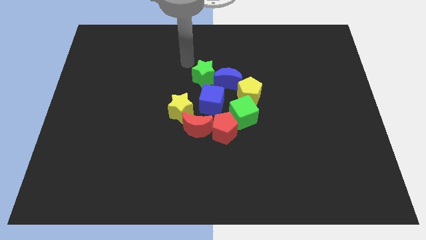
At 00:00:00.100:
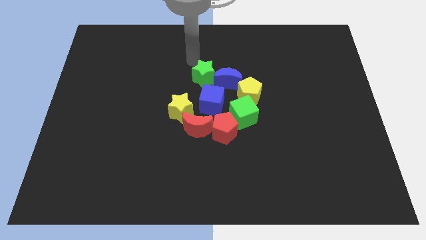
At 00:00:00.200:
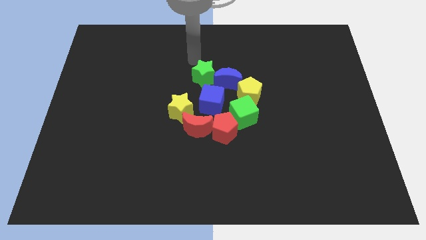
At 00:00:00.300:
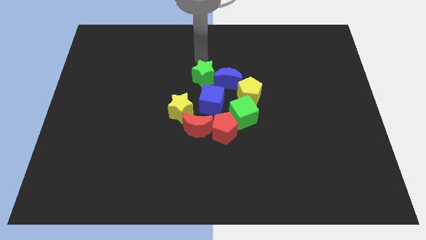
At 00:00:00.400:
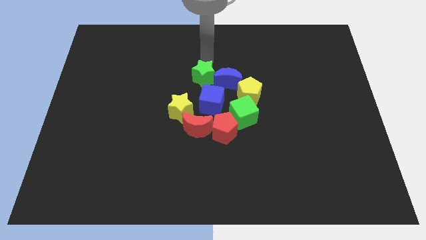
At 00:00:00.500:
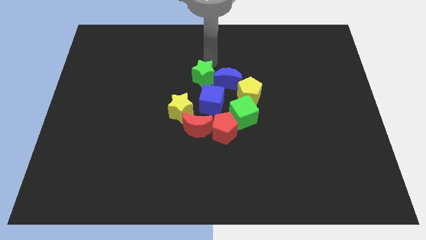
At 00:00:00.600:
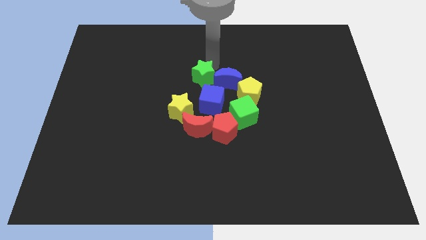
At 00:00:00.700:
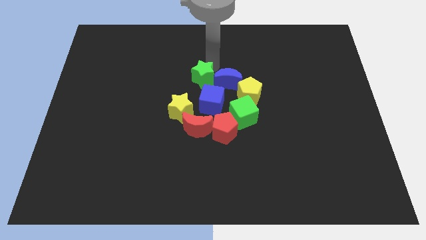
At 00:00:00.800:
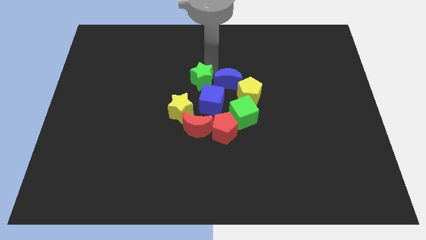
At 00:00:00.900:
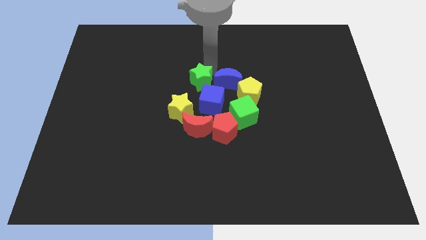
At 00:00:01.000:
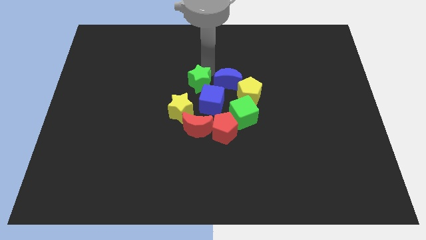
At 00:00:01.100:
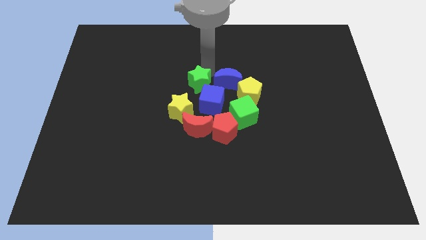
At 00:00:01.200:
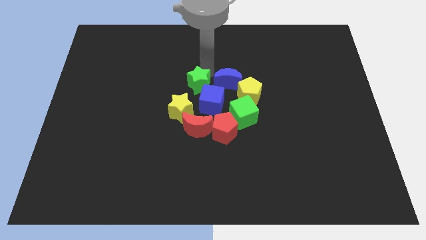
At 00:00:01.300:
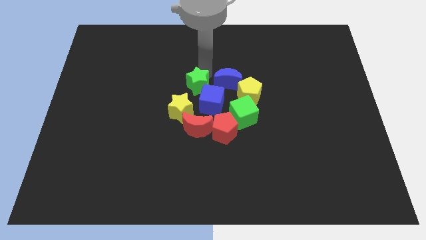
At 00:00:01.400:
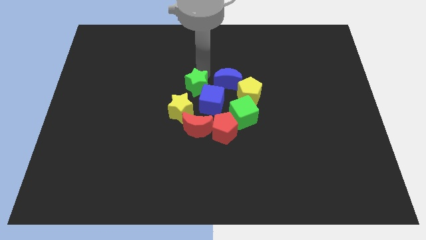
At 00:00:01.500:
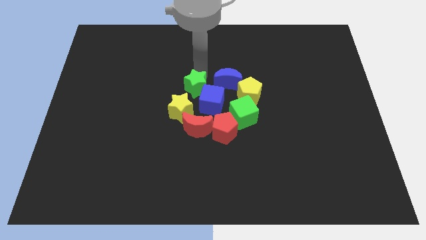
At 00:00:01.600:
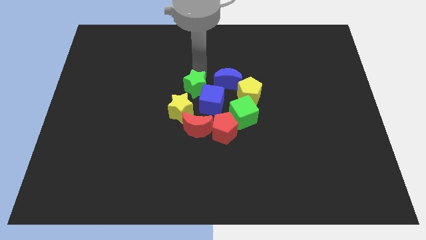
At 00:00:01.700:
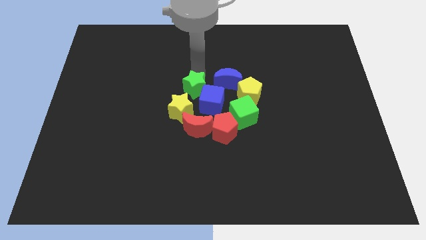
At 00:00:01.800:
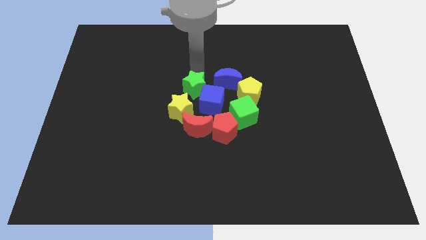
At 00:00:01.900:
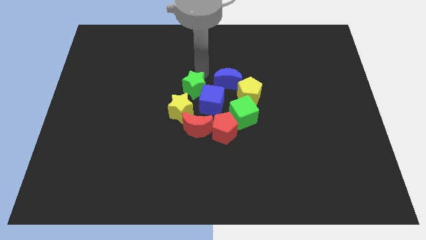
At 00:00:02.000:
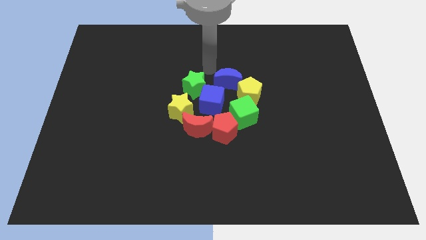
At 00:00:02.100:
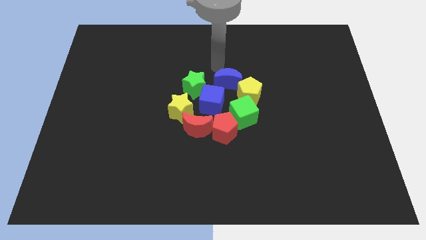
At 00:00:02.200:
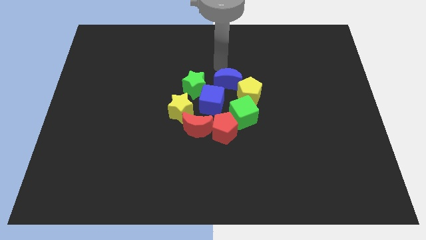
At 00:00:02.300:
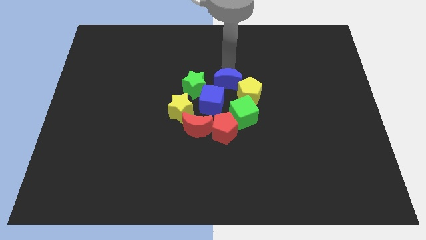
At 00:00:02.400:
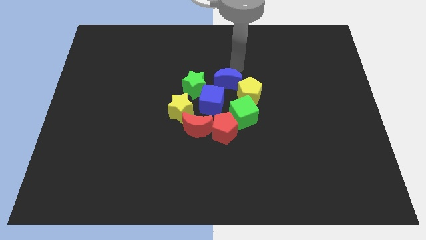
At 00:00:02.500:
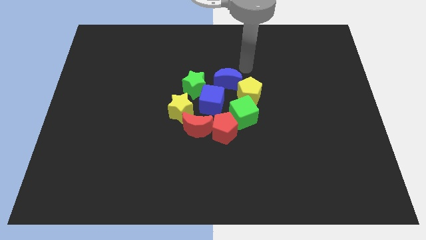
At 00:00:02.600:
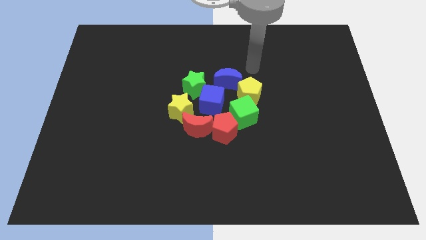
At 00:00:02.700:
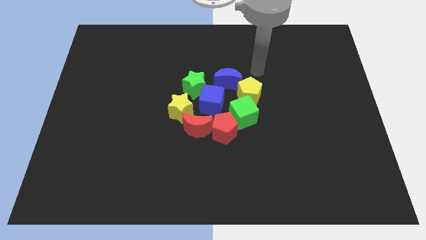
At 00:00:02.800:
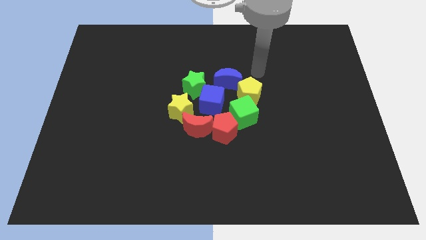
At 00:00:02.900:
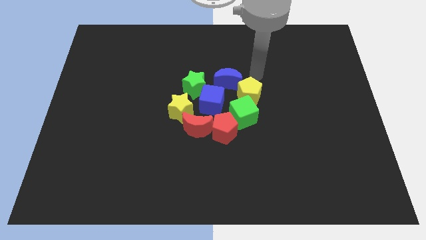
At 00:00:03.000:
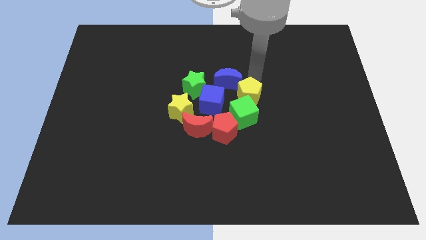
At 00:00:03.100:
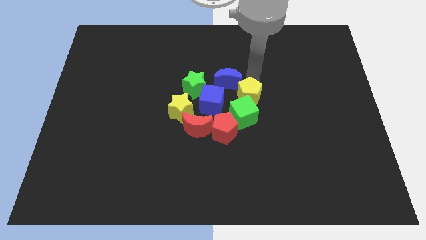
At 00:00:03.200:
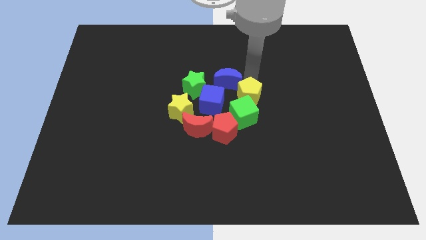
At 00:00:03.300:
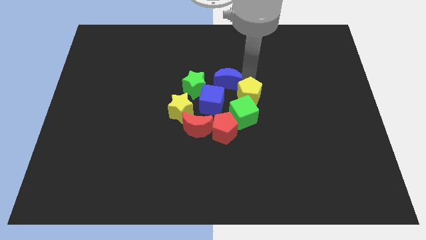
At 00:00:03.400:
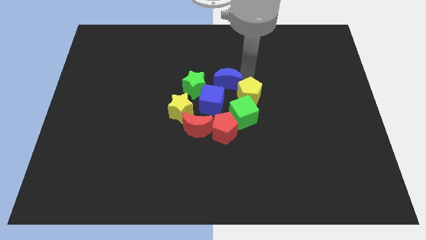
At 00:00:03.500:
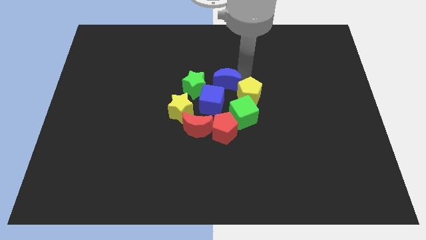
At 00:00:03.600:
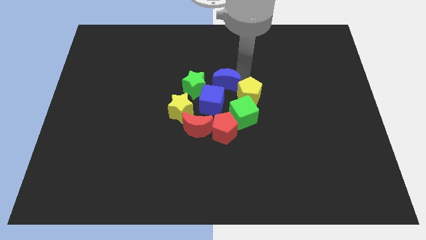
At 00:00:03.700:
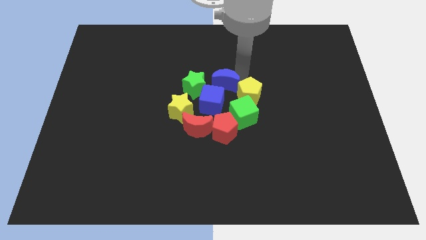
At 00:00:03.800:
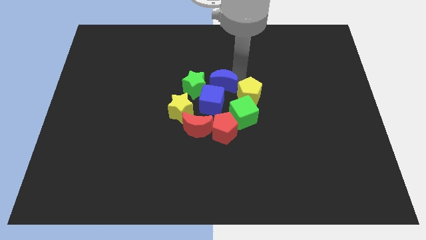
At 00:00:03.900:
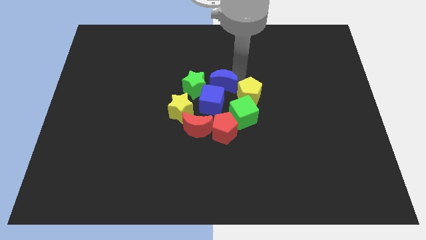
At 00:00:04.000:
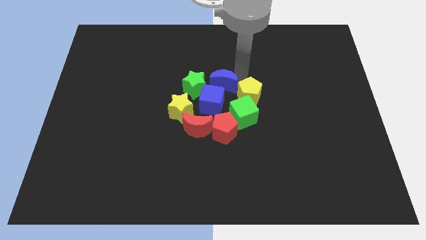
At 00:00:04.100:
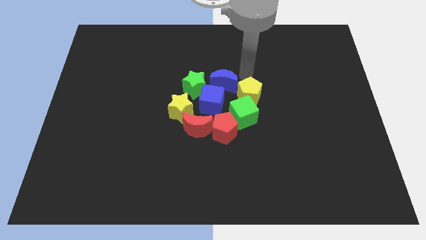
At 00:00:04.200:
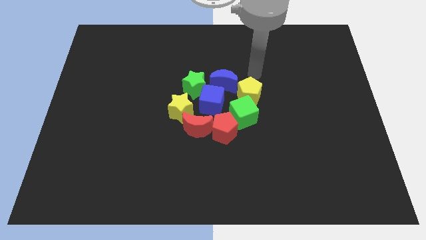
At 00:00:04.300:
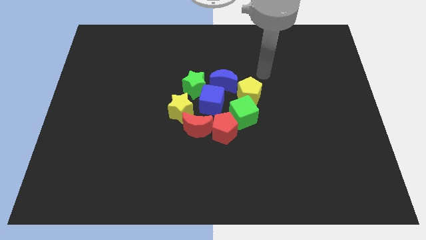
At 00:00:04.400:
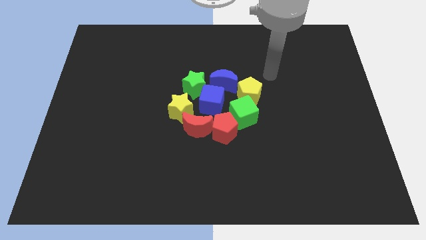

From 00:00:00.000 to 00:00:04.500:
slightly move the green star and blue crescent towards the center of the board

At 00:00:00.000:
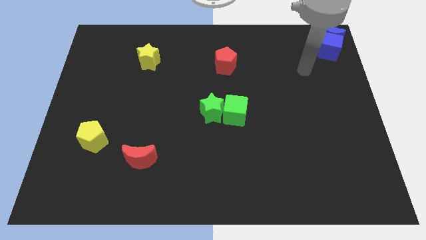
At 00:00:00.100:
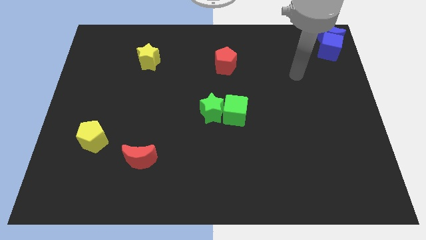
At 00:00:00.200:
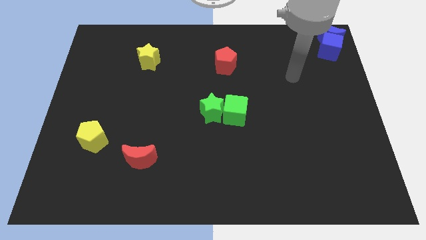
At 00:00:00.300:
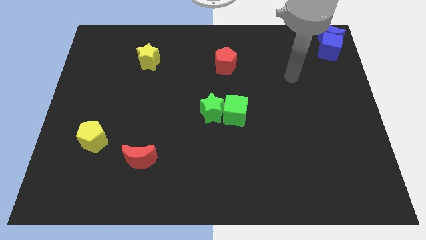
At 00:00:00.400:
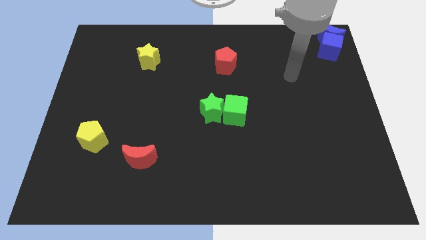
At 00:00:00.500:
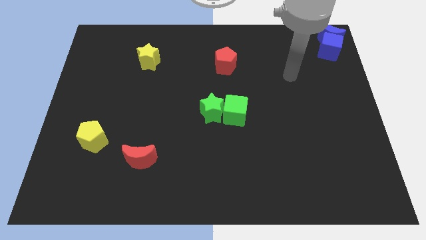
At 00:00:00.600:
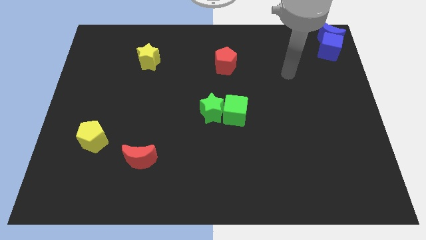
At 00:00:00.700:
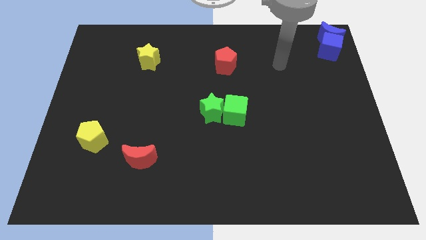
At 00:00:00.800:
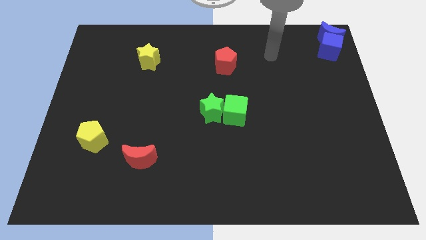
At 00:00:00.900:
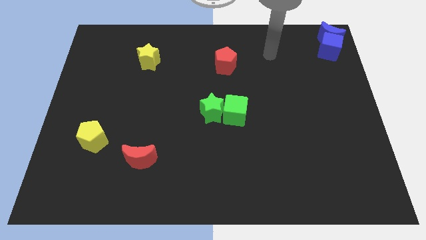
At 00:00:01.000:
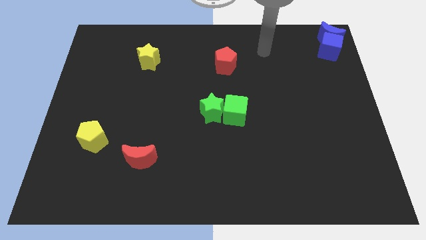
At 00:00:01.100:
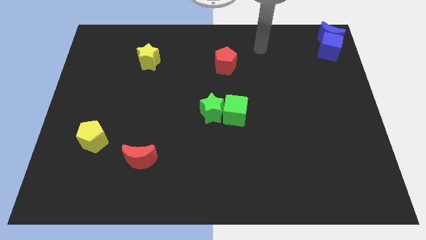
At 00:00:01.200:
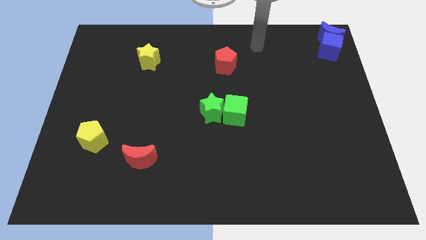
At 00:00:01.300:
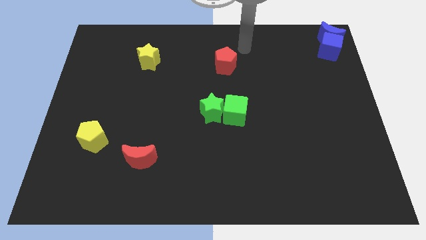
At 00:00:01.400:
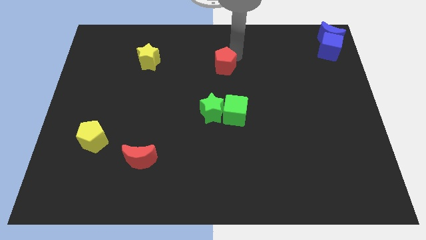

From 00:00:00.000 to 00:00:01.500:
move your arm towards the red pentagon

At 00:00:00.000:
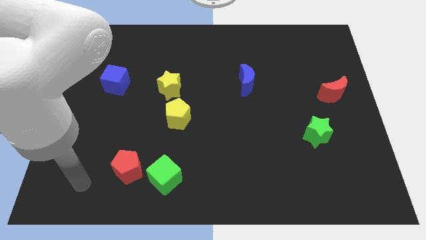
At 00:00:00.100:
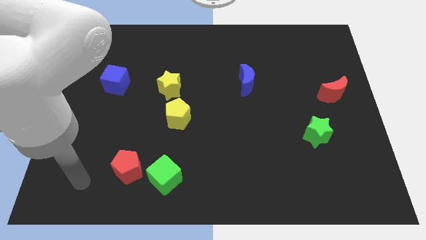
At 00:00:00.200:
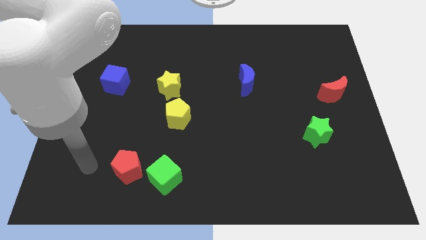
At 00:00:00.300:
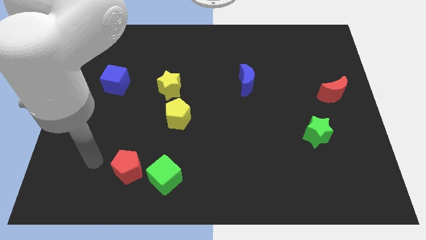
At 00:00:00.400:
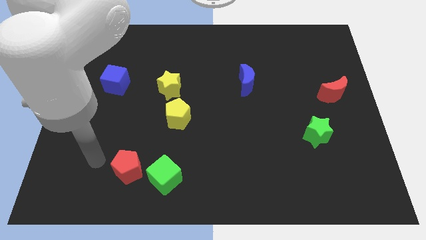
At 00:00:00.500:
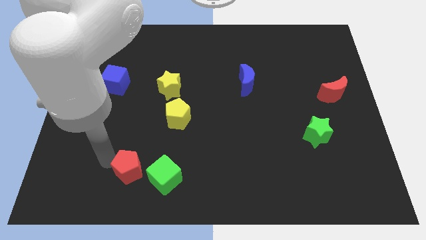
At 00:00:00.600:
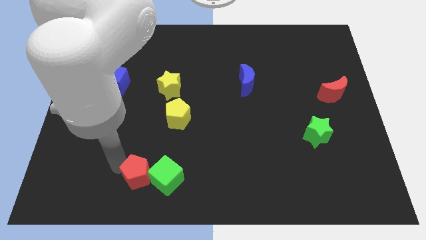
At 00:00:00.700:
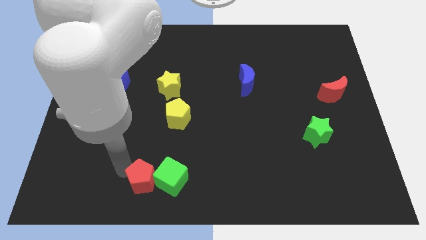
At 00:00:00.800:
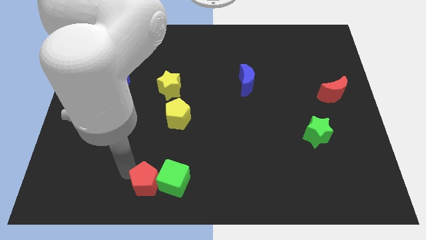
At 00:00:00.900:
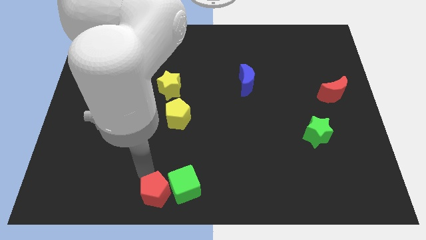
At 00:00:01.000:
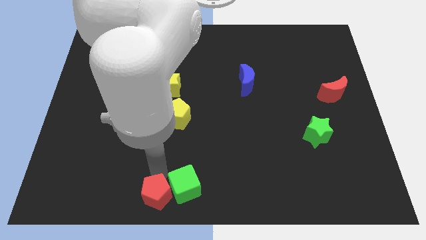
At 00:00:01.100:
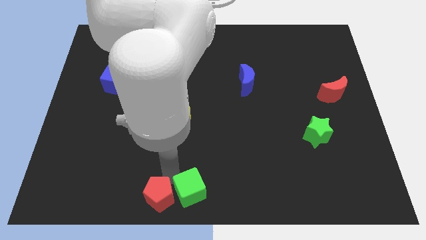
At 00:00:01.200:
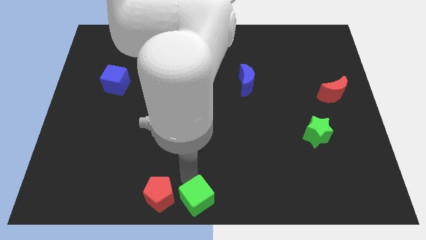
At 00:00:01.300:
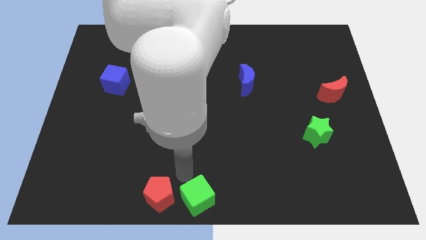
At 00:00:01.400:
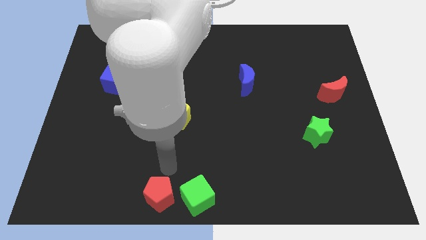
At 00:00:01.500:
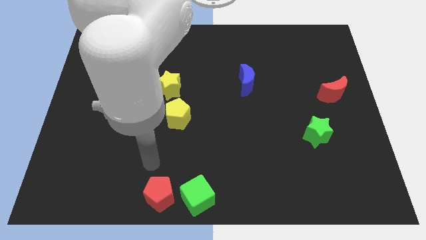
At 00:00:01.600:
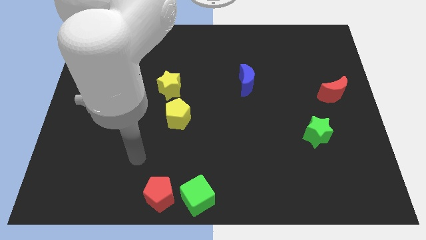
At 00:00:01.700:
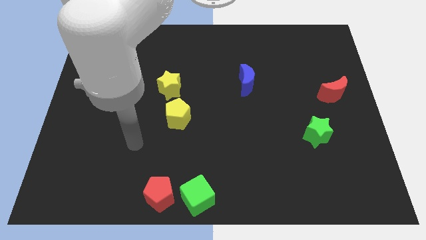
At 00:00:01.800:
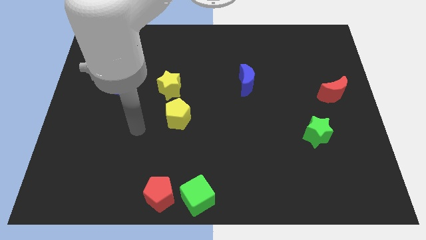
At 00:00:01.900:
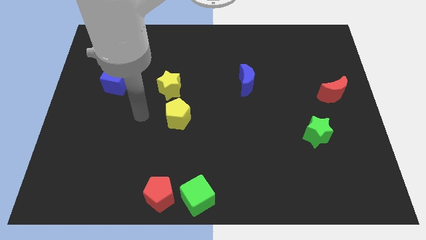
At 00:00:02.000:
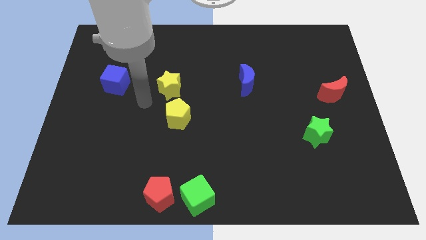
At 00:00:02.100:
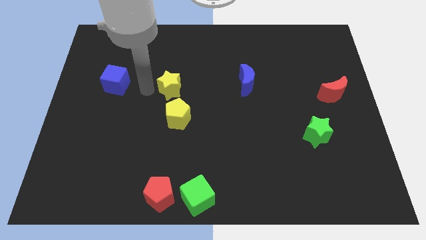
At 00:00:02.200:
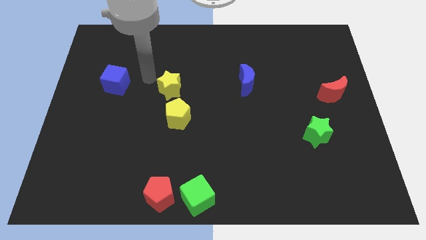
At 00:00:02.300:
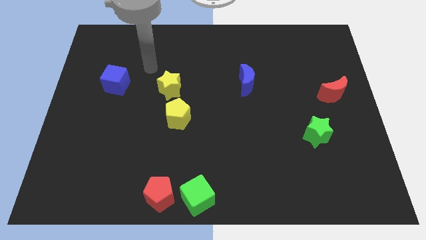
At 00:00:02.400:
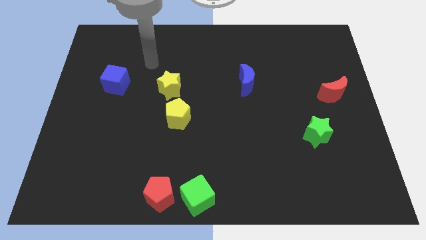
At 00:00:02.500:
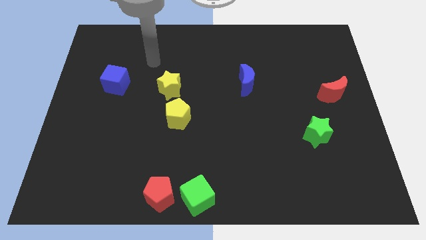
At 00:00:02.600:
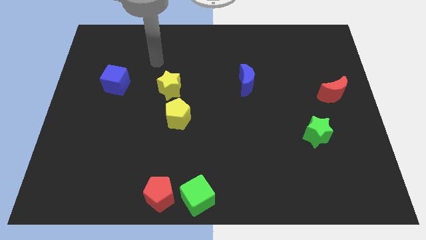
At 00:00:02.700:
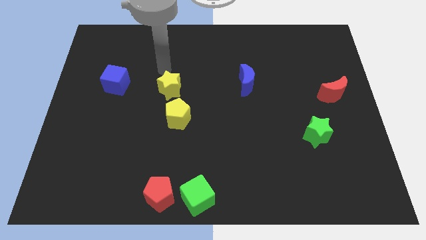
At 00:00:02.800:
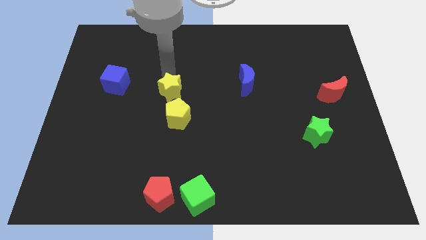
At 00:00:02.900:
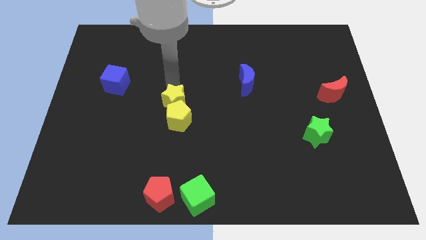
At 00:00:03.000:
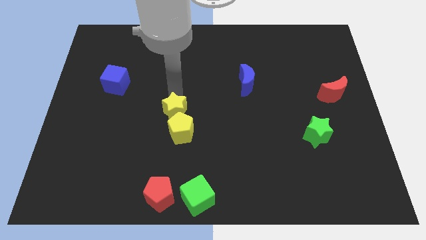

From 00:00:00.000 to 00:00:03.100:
move red pentagon along with green cube towards bottom middle of the board
